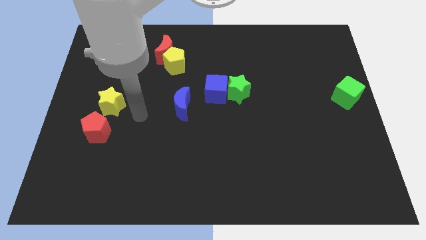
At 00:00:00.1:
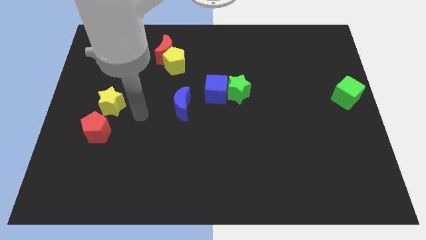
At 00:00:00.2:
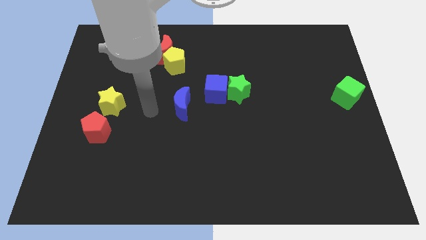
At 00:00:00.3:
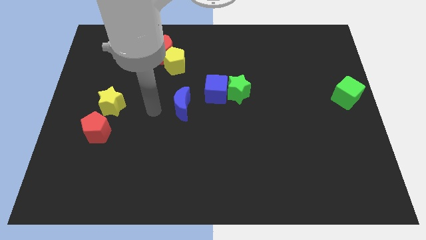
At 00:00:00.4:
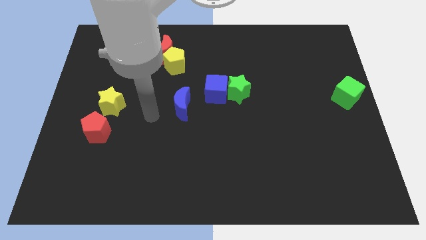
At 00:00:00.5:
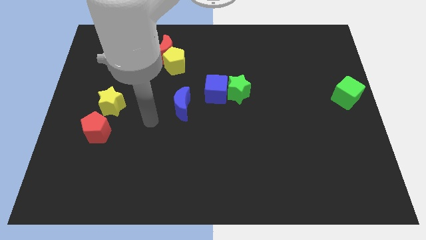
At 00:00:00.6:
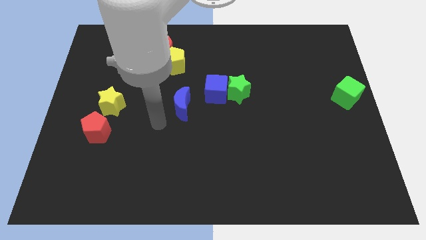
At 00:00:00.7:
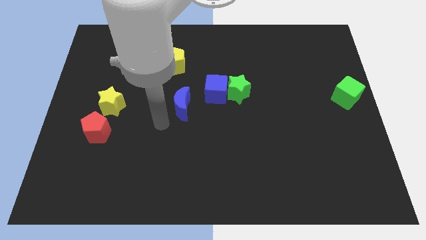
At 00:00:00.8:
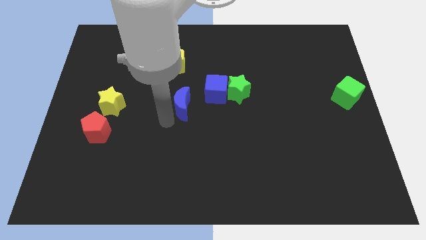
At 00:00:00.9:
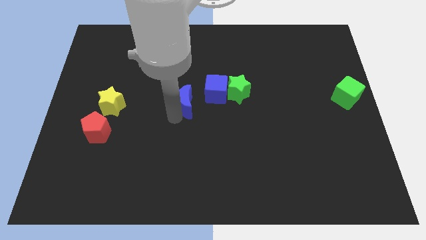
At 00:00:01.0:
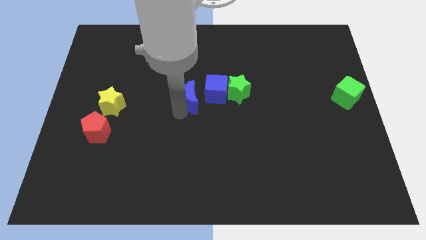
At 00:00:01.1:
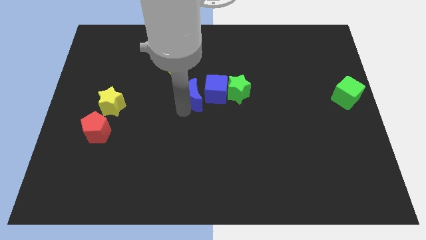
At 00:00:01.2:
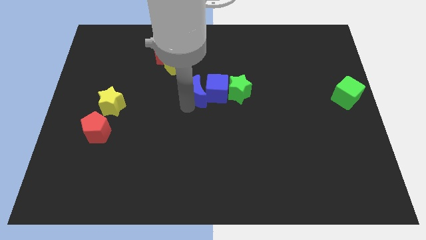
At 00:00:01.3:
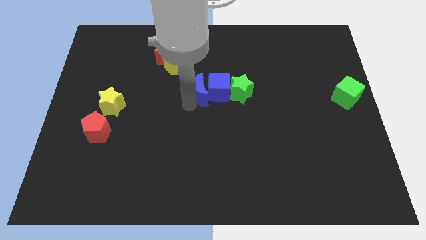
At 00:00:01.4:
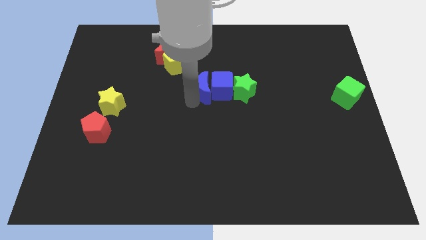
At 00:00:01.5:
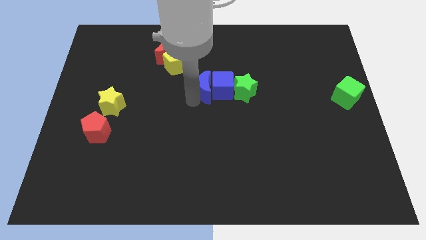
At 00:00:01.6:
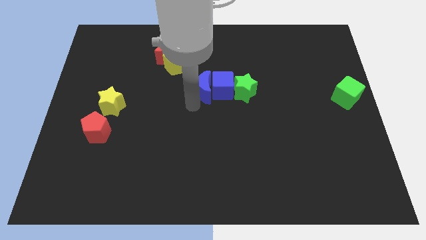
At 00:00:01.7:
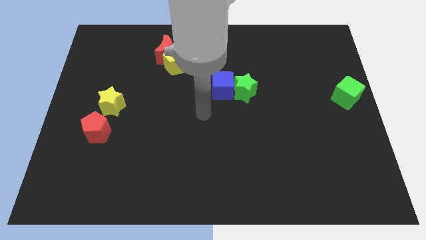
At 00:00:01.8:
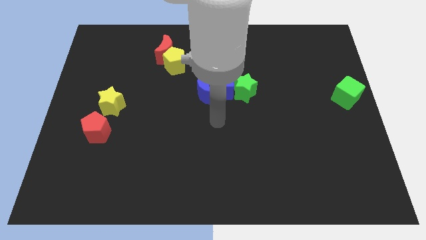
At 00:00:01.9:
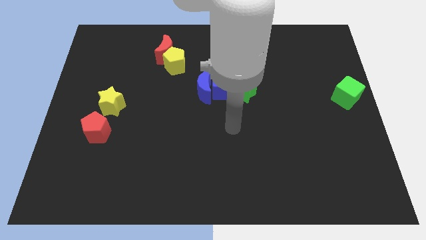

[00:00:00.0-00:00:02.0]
push the blue moon into the blue cube

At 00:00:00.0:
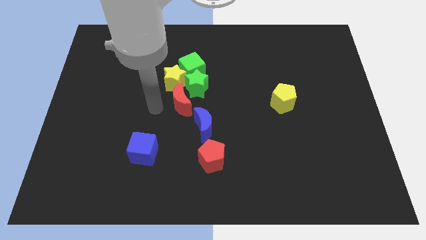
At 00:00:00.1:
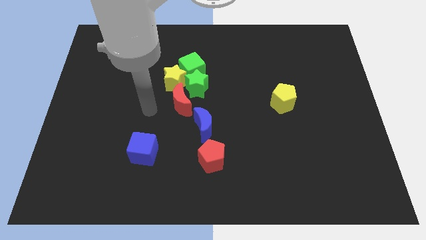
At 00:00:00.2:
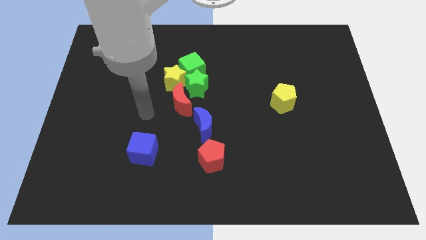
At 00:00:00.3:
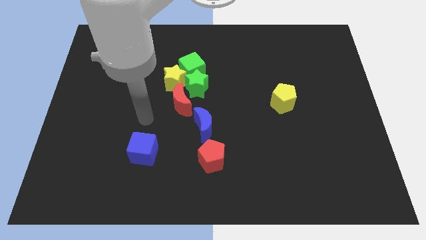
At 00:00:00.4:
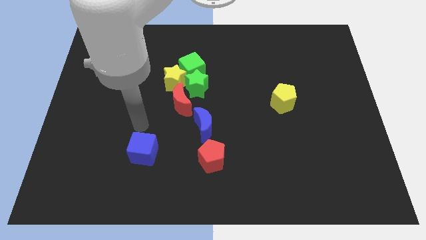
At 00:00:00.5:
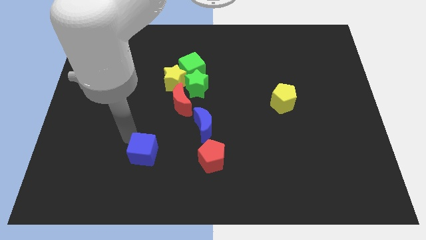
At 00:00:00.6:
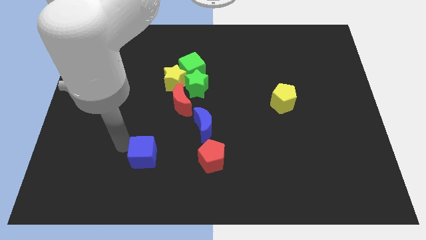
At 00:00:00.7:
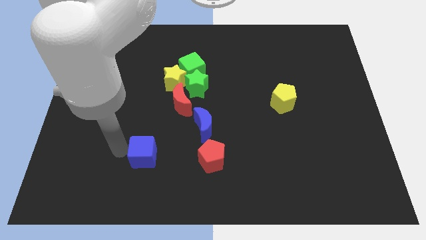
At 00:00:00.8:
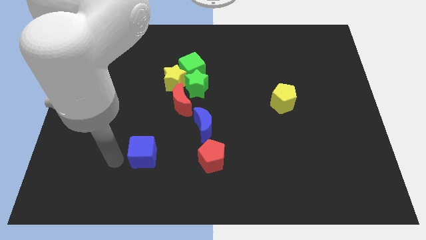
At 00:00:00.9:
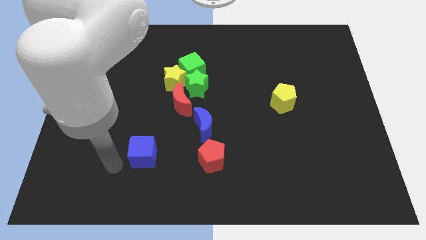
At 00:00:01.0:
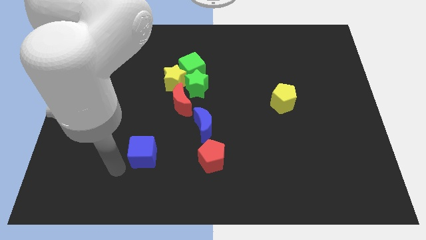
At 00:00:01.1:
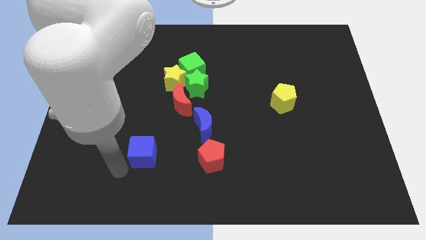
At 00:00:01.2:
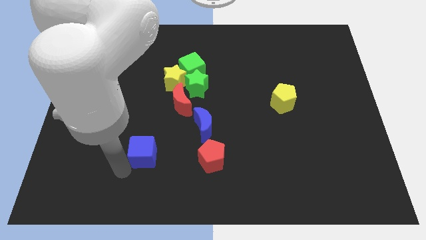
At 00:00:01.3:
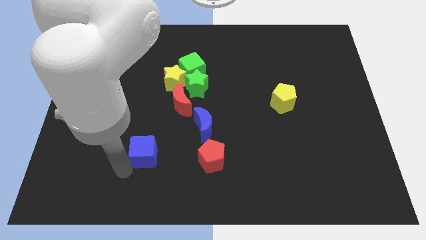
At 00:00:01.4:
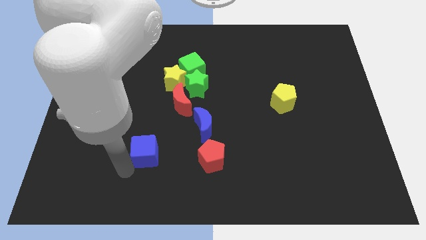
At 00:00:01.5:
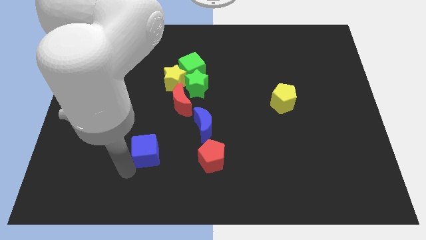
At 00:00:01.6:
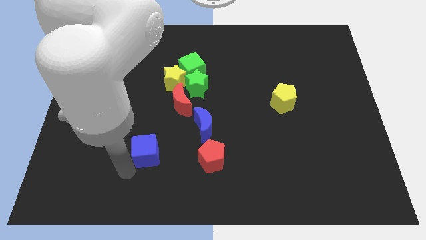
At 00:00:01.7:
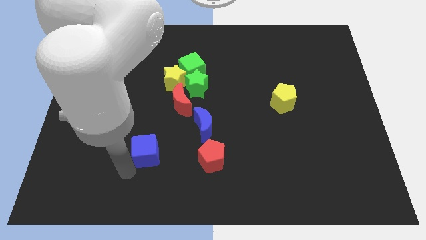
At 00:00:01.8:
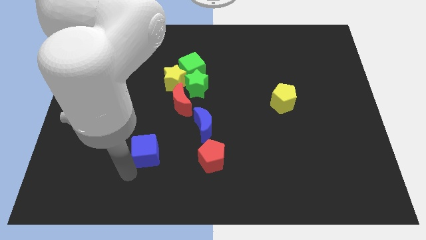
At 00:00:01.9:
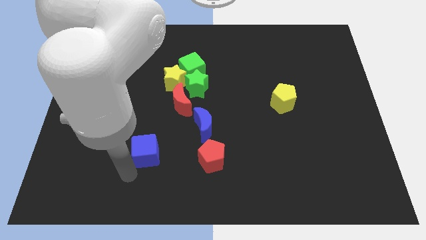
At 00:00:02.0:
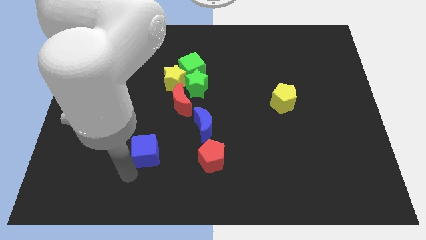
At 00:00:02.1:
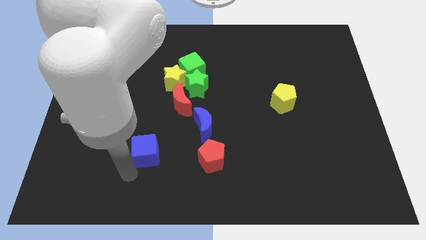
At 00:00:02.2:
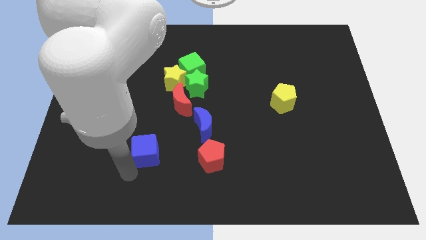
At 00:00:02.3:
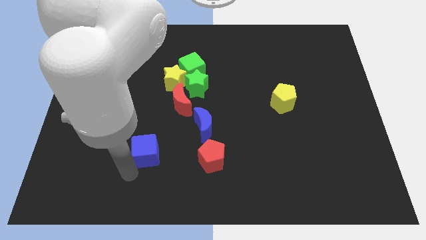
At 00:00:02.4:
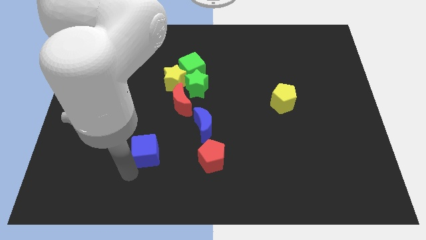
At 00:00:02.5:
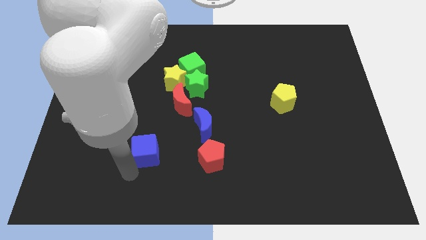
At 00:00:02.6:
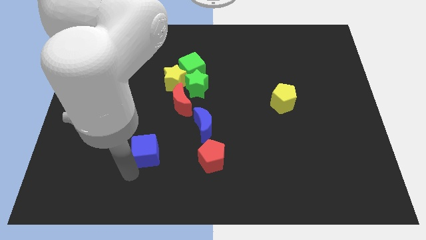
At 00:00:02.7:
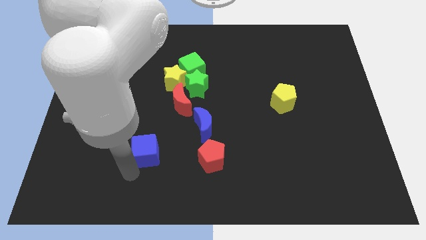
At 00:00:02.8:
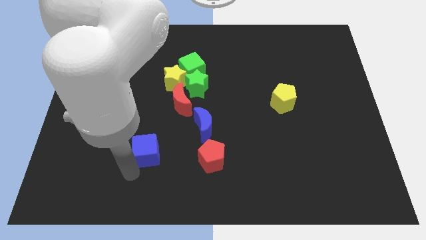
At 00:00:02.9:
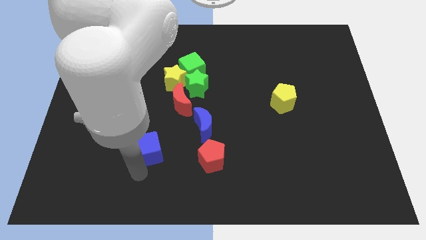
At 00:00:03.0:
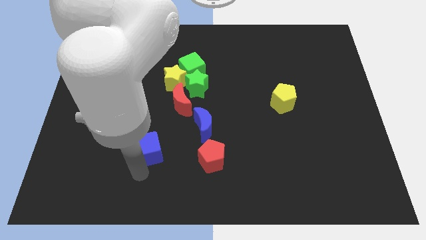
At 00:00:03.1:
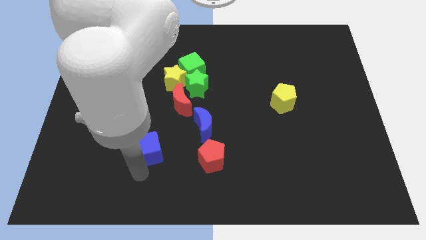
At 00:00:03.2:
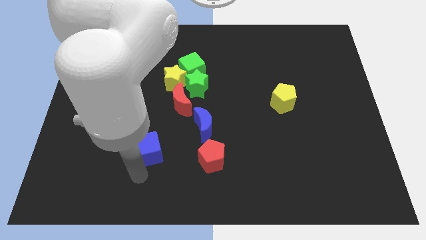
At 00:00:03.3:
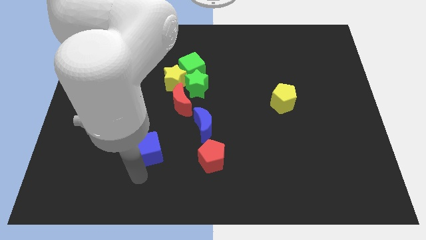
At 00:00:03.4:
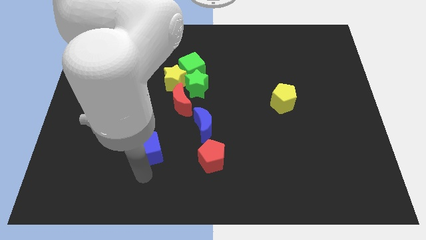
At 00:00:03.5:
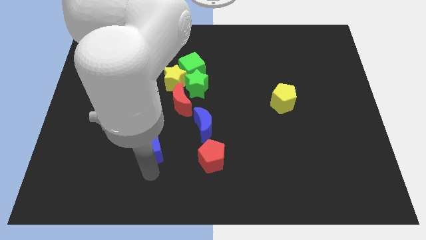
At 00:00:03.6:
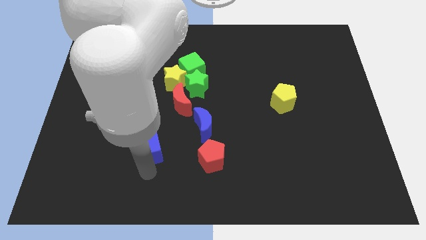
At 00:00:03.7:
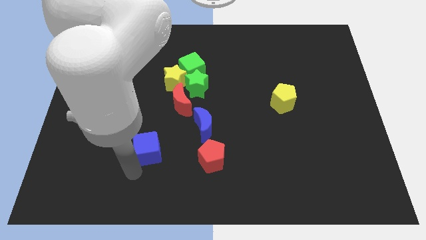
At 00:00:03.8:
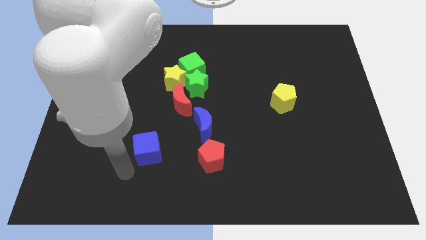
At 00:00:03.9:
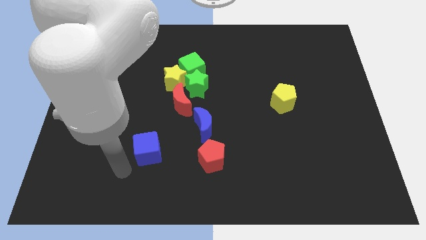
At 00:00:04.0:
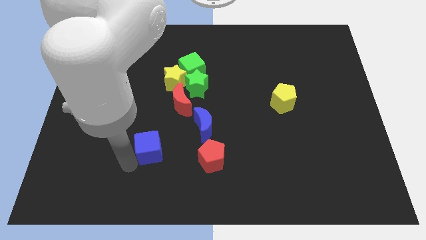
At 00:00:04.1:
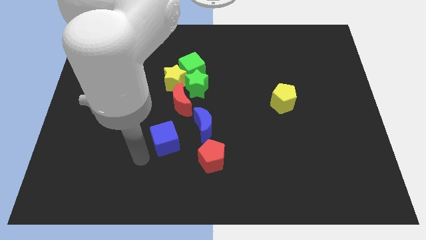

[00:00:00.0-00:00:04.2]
move blue cube towards blue moon

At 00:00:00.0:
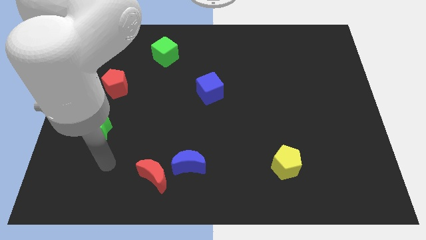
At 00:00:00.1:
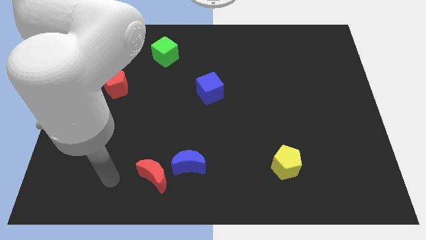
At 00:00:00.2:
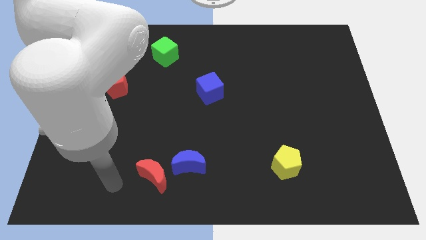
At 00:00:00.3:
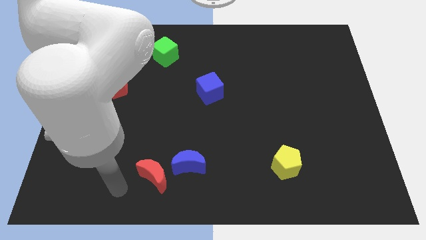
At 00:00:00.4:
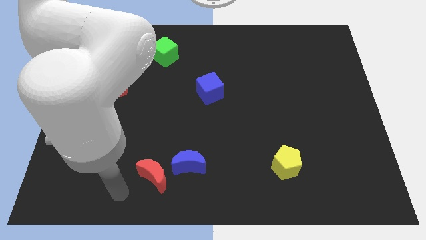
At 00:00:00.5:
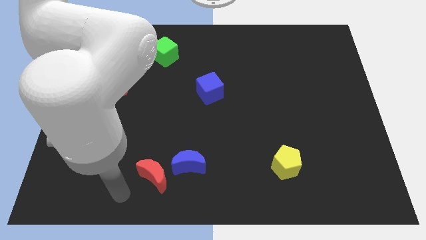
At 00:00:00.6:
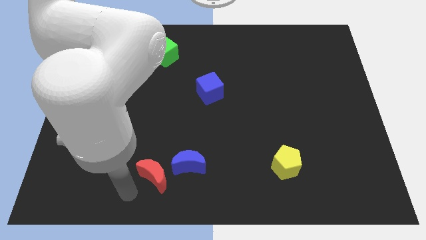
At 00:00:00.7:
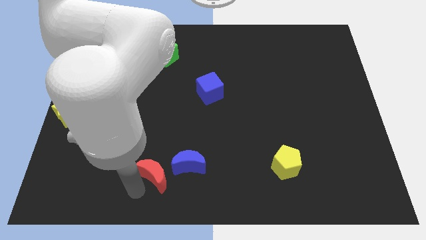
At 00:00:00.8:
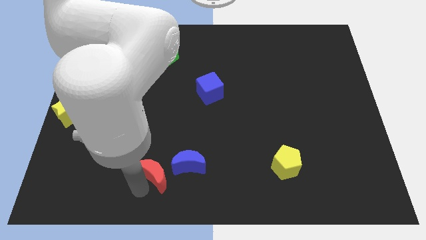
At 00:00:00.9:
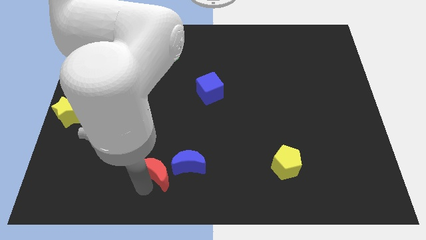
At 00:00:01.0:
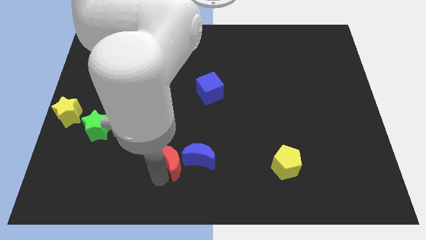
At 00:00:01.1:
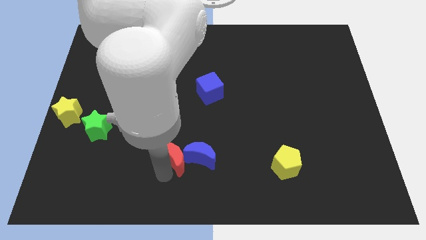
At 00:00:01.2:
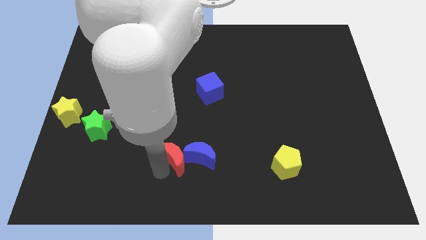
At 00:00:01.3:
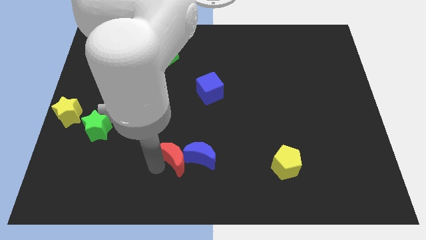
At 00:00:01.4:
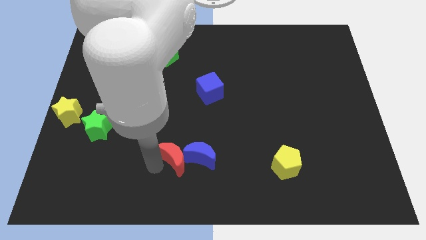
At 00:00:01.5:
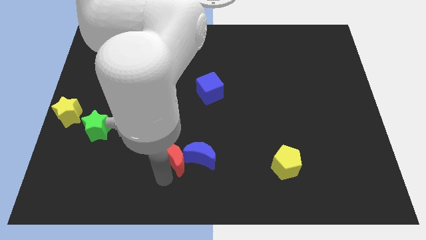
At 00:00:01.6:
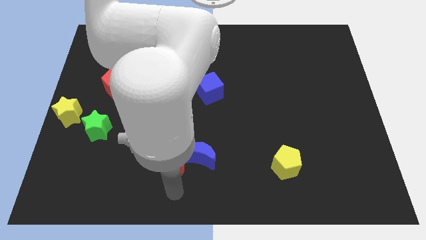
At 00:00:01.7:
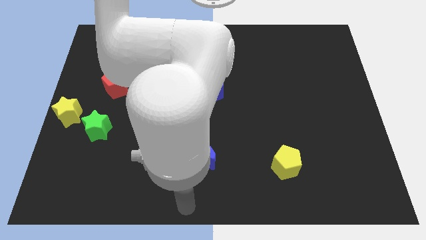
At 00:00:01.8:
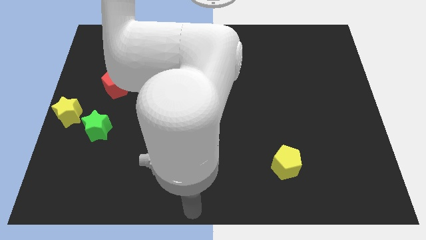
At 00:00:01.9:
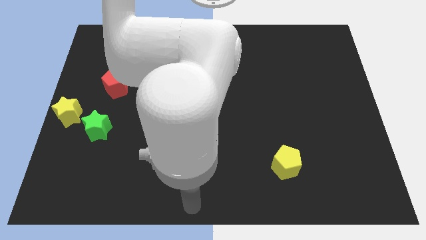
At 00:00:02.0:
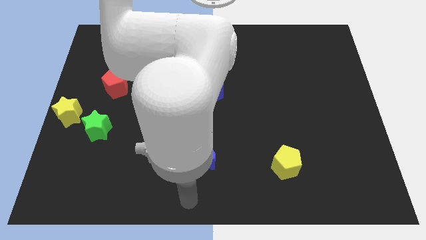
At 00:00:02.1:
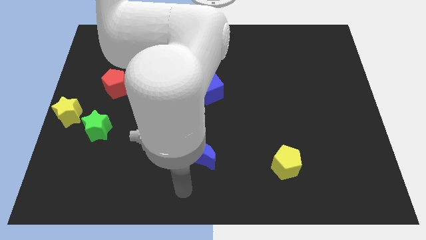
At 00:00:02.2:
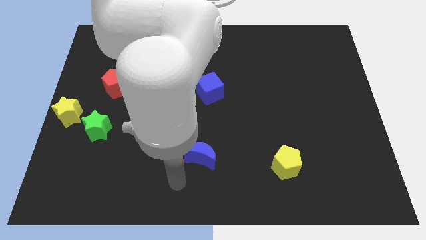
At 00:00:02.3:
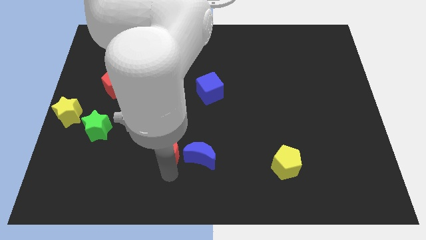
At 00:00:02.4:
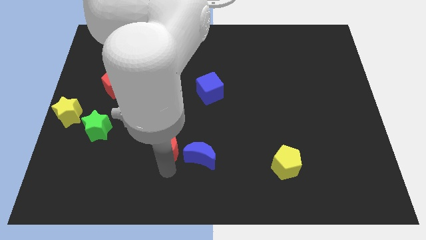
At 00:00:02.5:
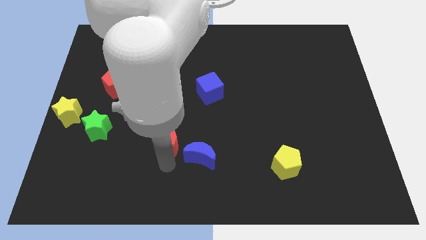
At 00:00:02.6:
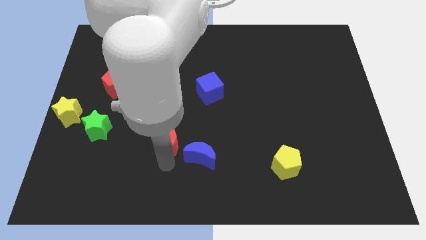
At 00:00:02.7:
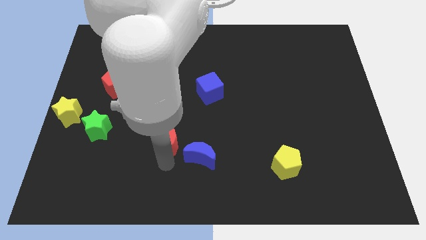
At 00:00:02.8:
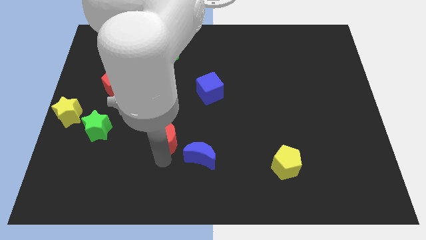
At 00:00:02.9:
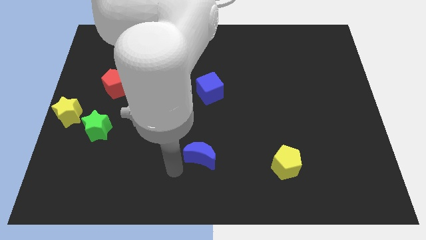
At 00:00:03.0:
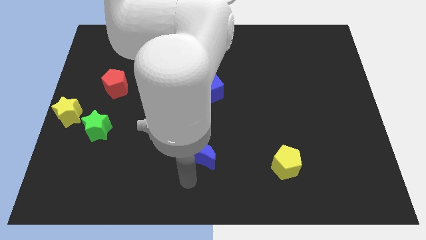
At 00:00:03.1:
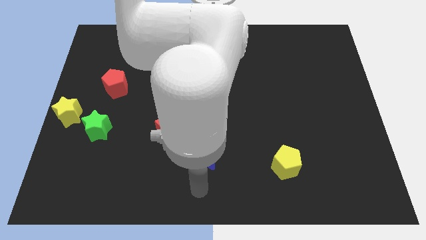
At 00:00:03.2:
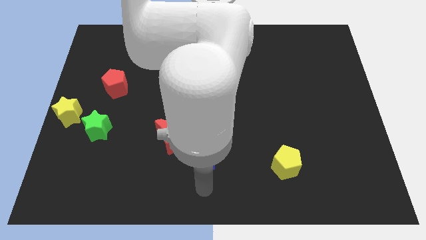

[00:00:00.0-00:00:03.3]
push the red crescent to the right of the green star
